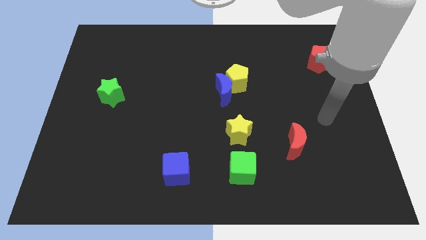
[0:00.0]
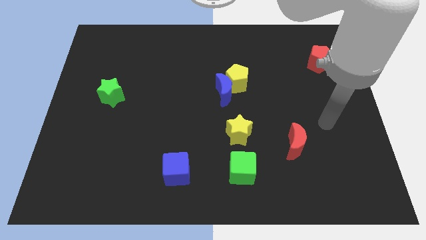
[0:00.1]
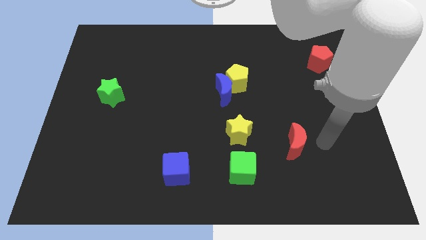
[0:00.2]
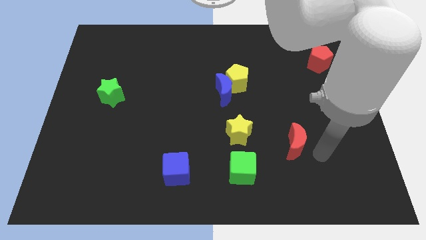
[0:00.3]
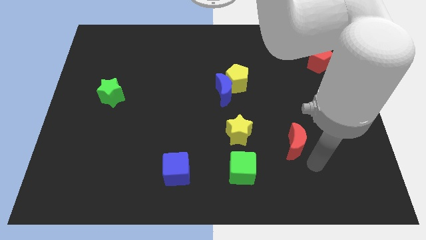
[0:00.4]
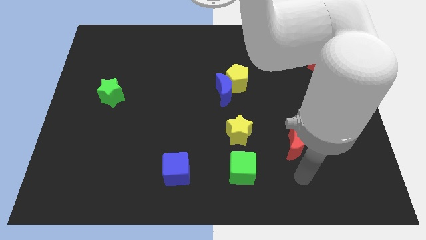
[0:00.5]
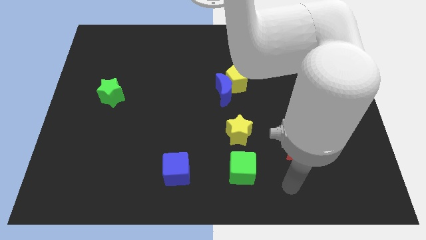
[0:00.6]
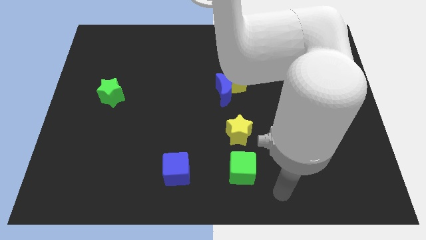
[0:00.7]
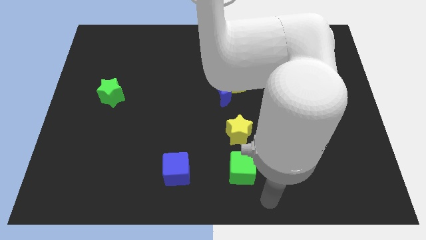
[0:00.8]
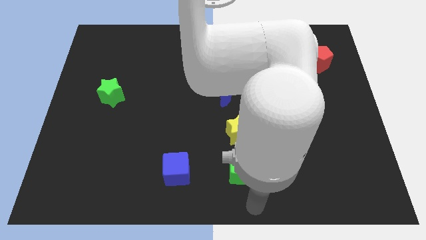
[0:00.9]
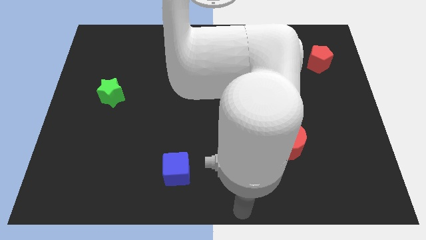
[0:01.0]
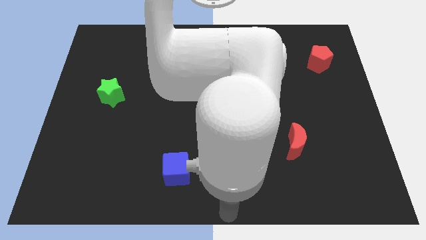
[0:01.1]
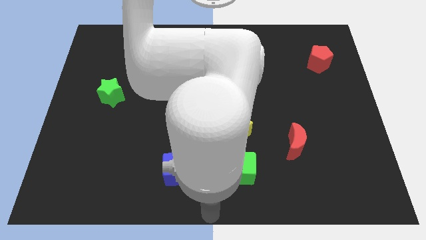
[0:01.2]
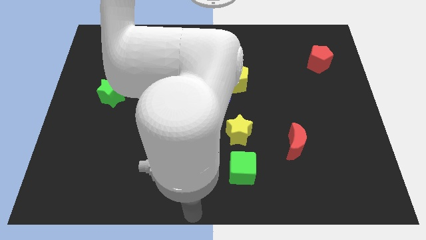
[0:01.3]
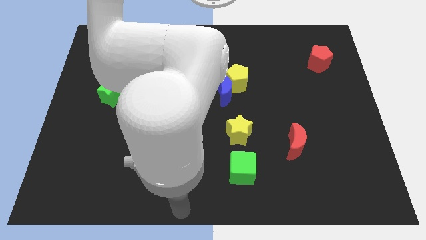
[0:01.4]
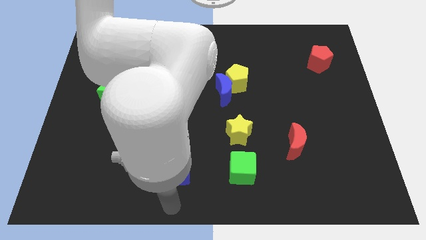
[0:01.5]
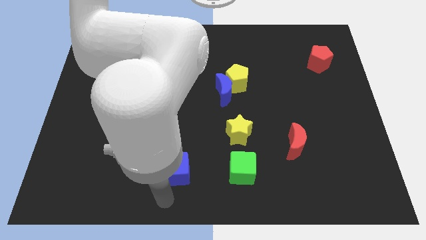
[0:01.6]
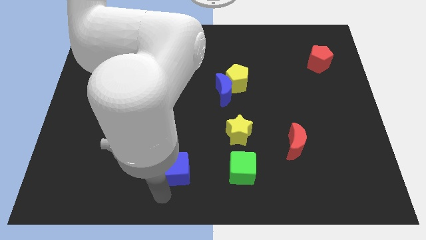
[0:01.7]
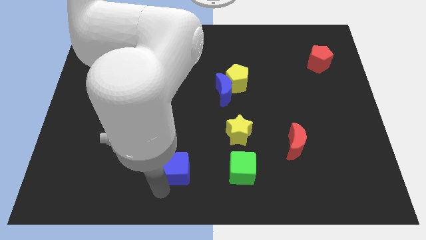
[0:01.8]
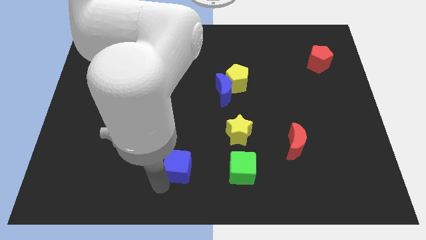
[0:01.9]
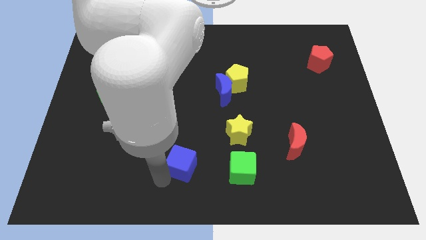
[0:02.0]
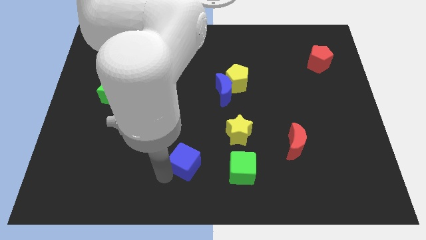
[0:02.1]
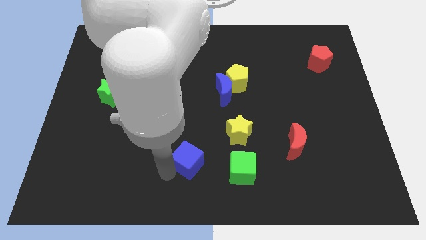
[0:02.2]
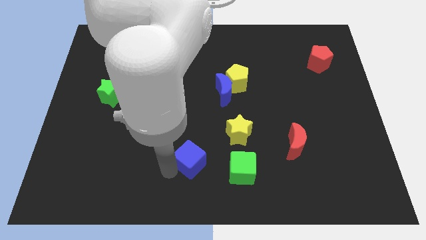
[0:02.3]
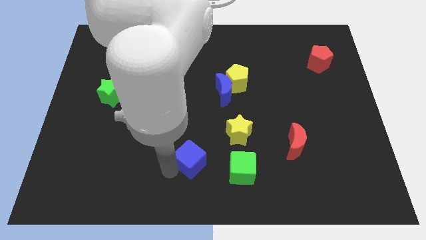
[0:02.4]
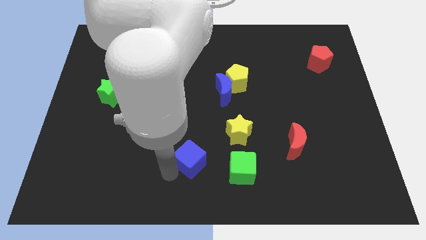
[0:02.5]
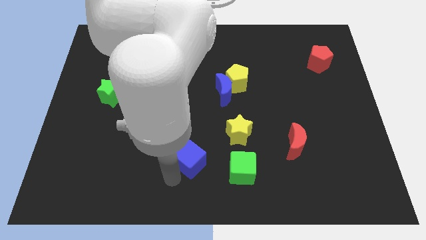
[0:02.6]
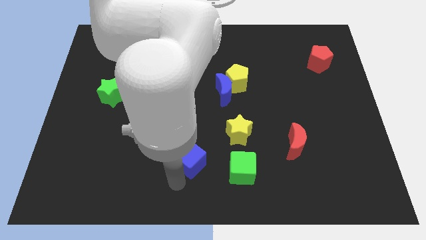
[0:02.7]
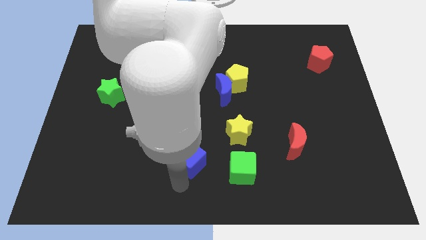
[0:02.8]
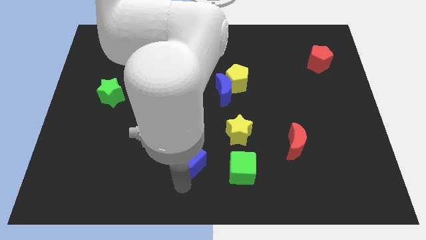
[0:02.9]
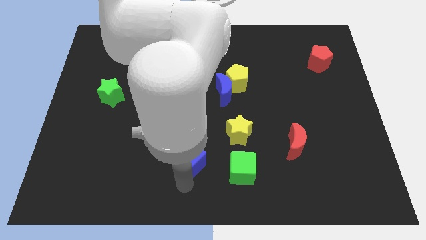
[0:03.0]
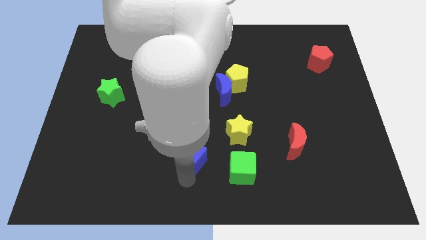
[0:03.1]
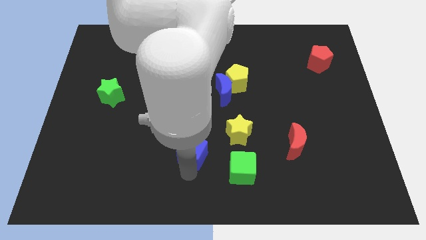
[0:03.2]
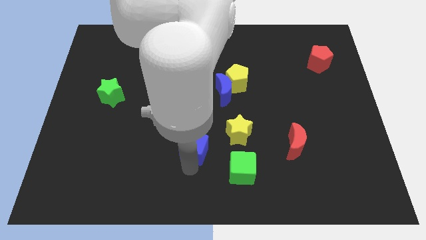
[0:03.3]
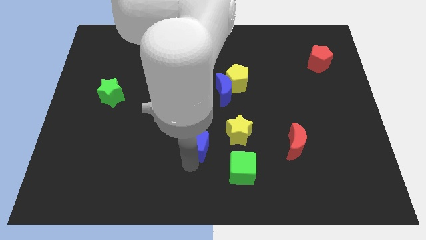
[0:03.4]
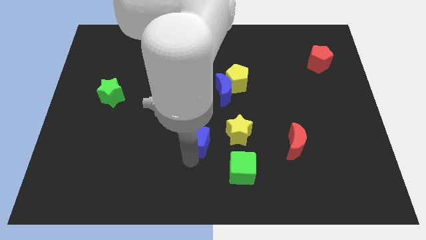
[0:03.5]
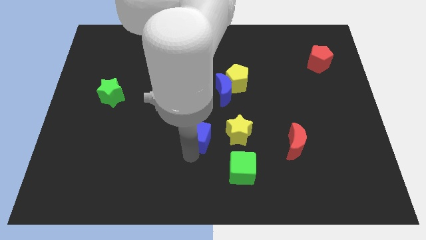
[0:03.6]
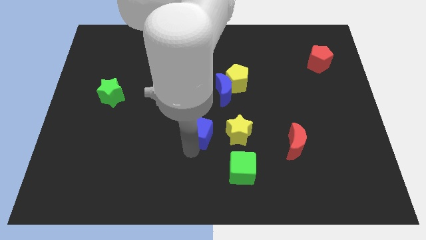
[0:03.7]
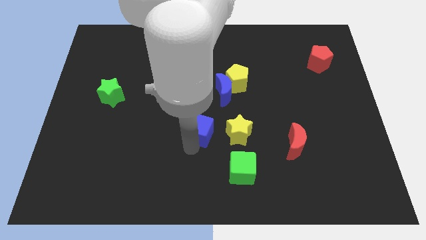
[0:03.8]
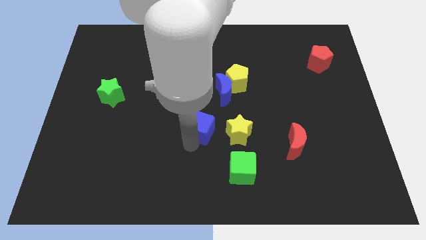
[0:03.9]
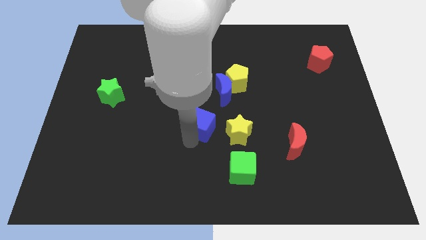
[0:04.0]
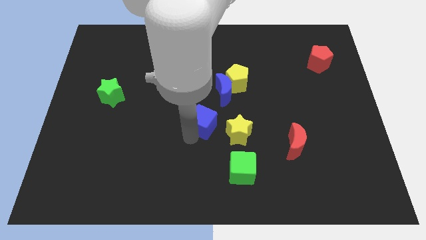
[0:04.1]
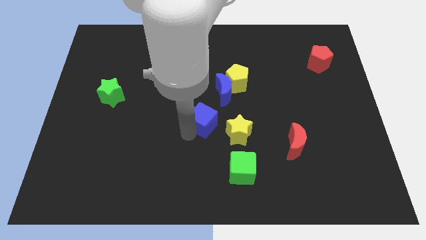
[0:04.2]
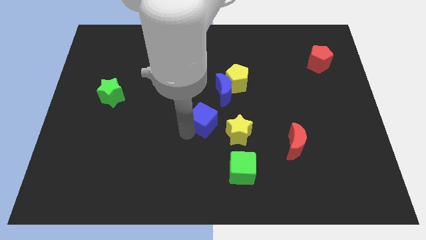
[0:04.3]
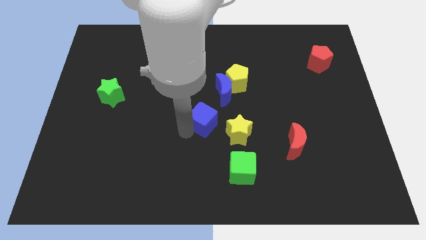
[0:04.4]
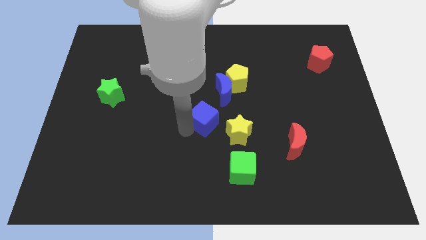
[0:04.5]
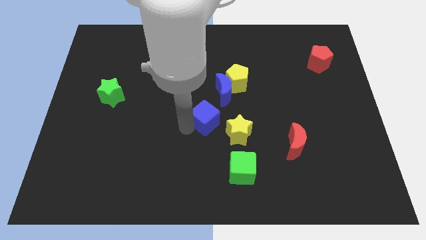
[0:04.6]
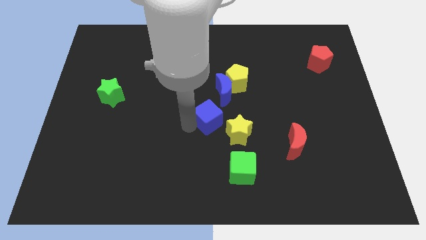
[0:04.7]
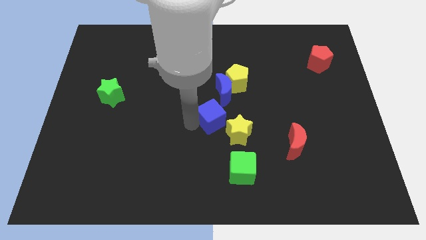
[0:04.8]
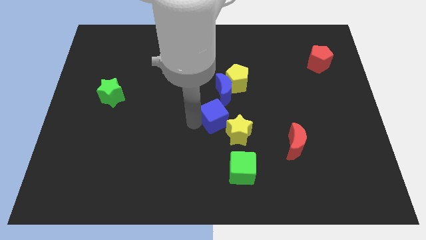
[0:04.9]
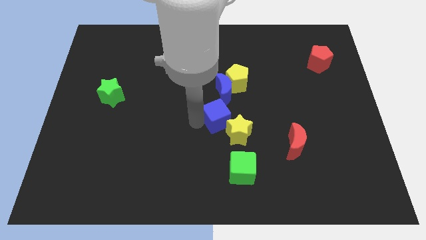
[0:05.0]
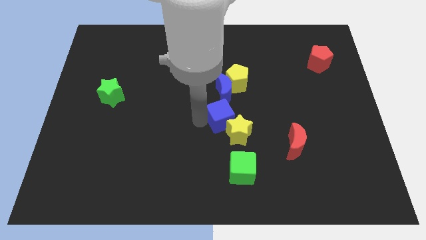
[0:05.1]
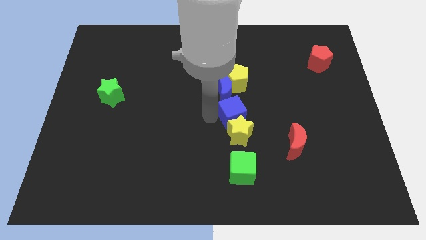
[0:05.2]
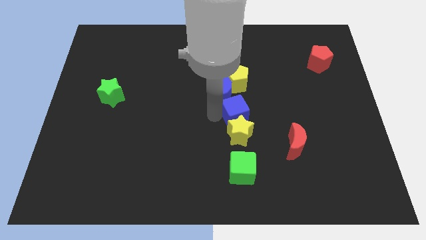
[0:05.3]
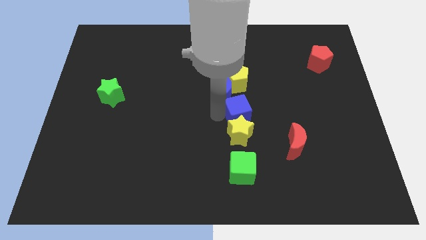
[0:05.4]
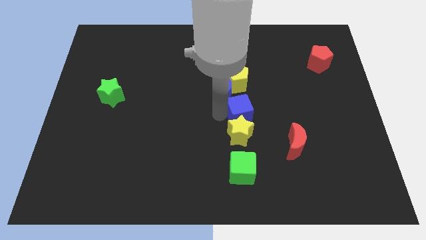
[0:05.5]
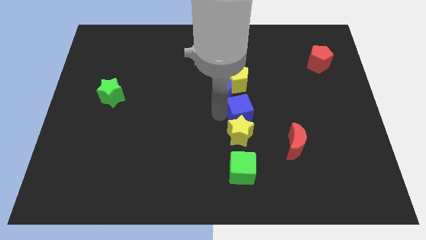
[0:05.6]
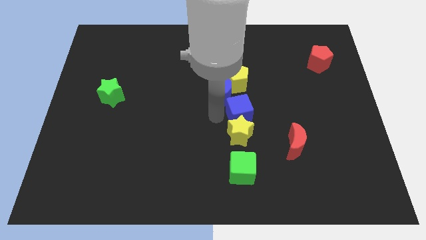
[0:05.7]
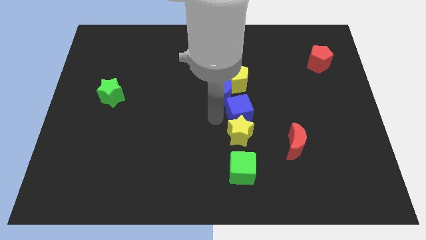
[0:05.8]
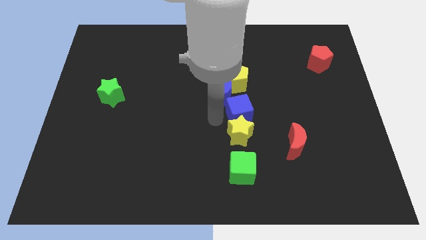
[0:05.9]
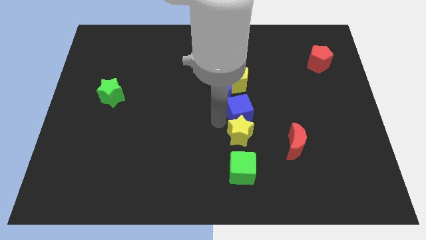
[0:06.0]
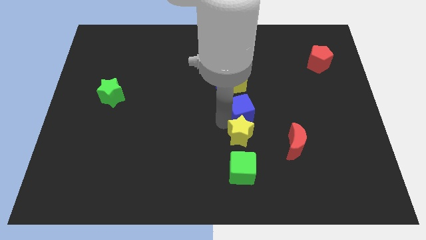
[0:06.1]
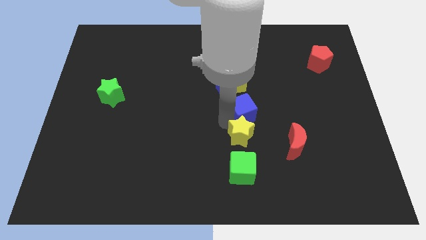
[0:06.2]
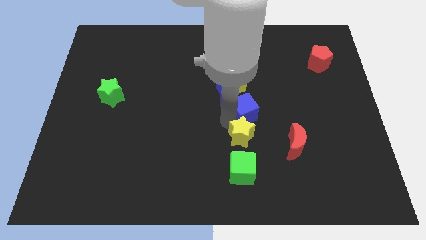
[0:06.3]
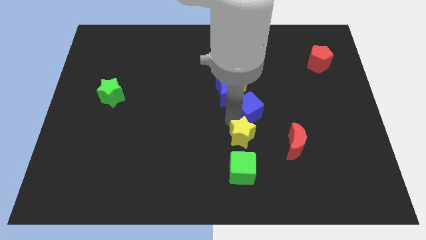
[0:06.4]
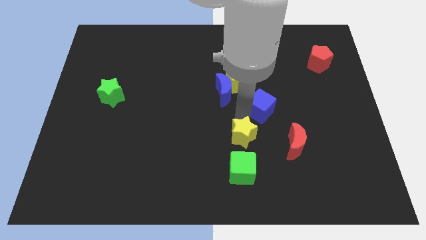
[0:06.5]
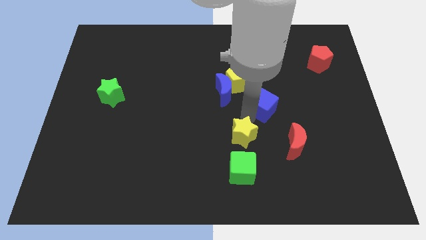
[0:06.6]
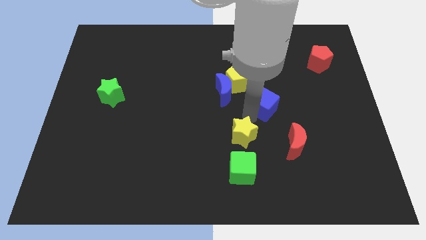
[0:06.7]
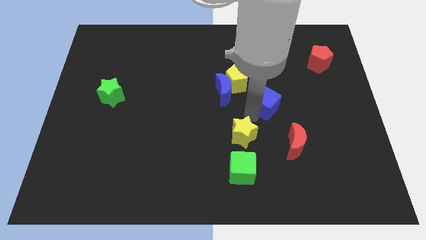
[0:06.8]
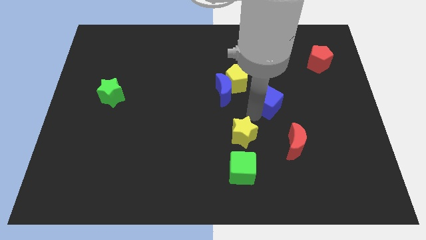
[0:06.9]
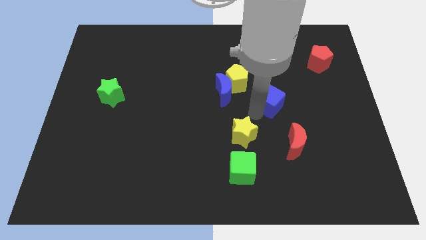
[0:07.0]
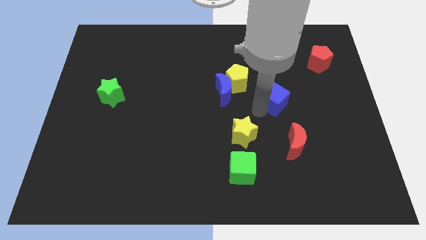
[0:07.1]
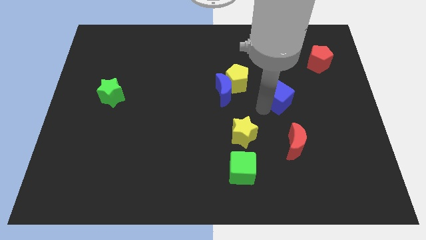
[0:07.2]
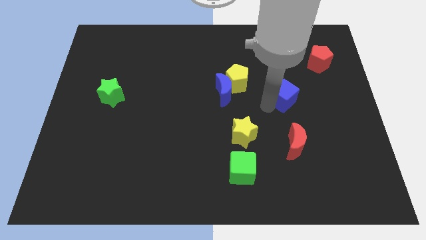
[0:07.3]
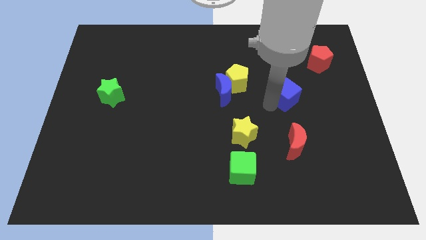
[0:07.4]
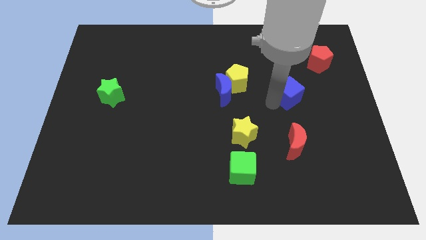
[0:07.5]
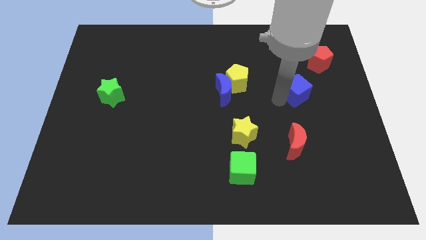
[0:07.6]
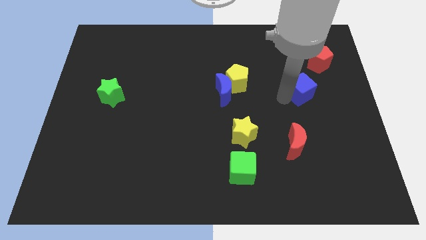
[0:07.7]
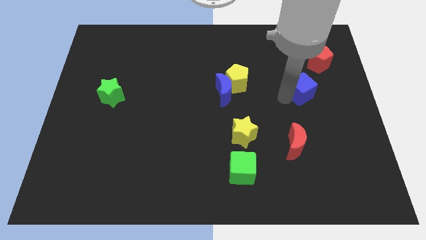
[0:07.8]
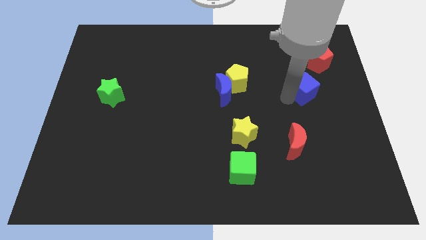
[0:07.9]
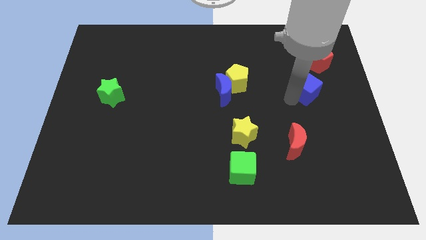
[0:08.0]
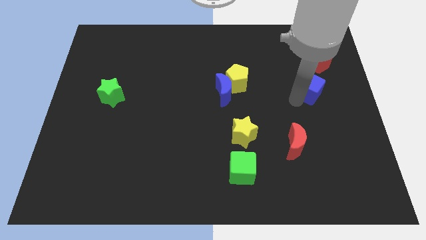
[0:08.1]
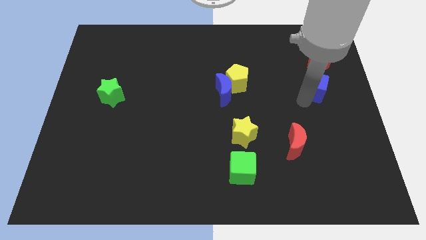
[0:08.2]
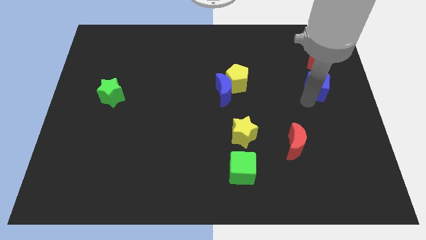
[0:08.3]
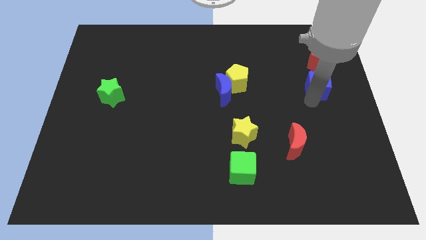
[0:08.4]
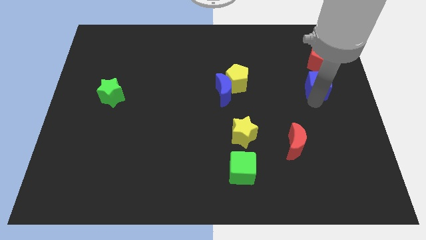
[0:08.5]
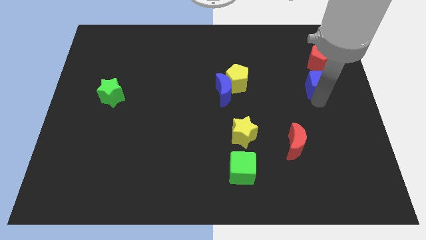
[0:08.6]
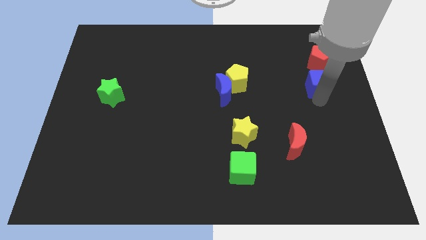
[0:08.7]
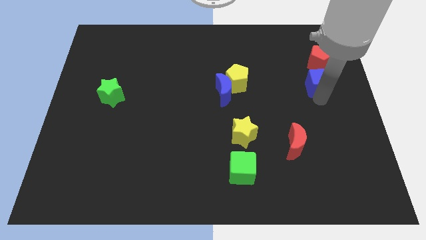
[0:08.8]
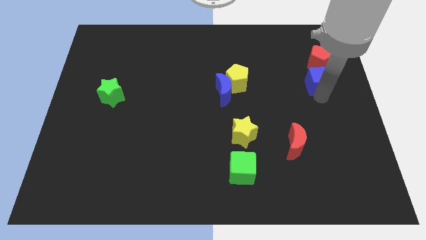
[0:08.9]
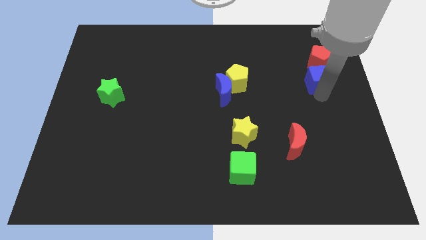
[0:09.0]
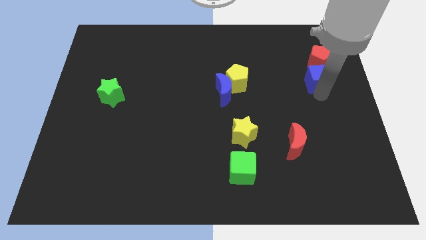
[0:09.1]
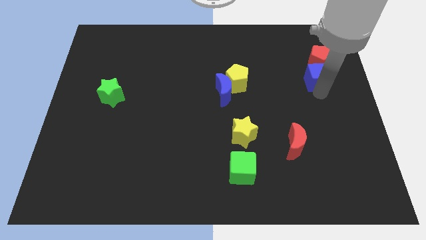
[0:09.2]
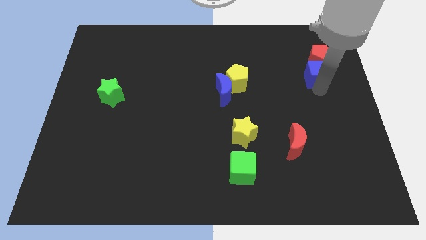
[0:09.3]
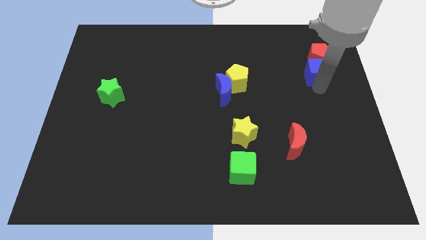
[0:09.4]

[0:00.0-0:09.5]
slide the blue cube towards the red pentagon
